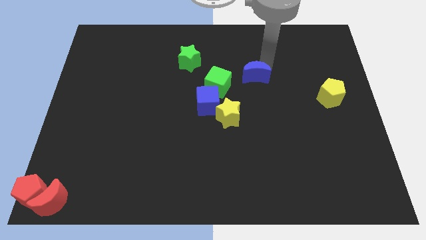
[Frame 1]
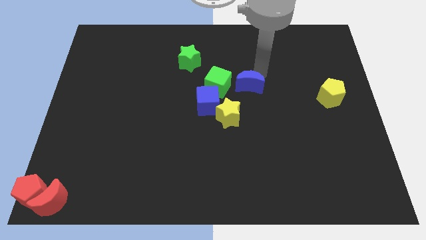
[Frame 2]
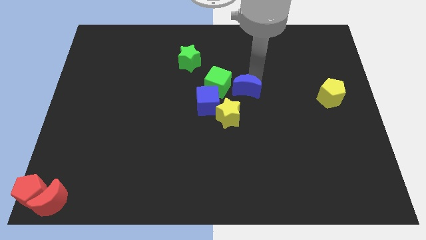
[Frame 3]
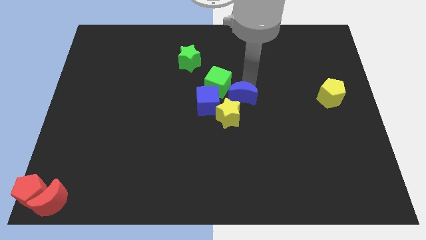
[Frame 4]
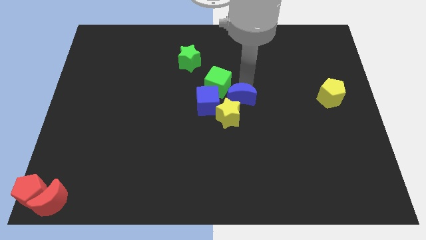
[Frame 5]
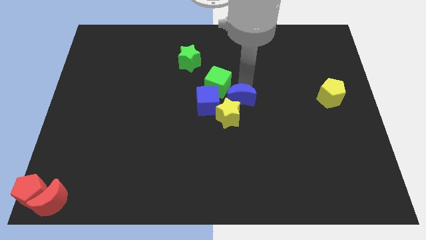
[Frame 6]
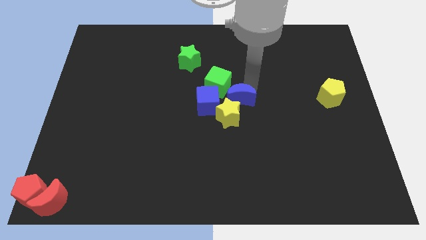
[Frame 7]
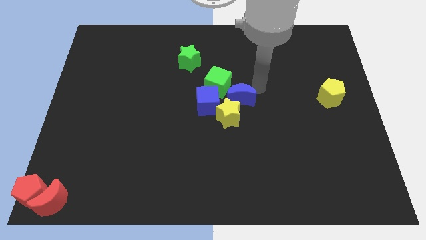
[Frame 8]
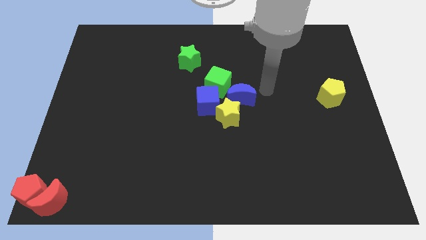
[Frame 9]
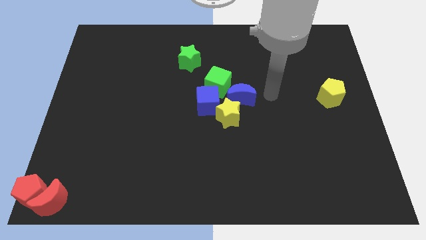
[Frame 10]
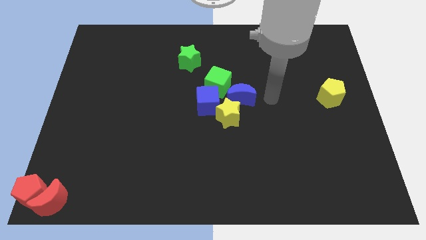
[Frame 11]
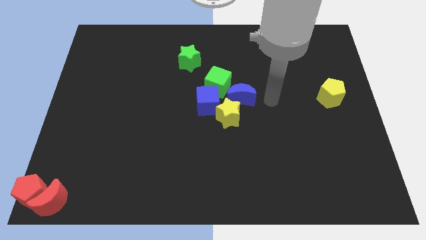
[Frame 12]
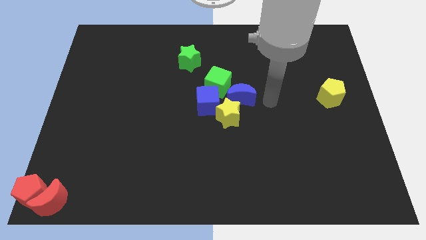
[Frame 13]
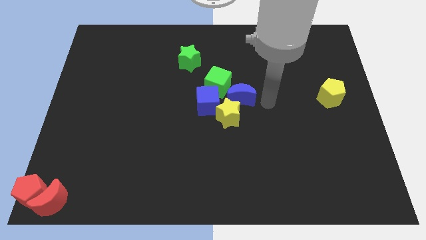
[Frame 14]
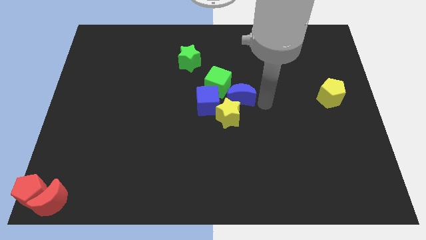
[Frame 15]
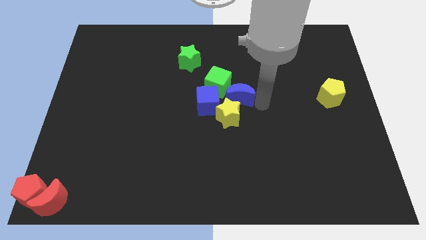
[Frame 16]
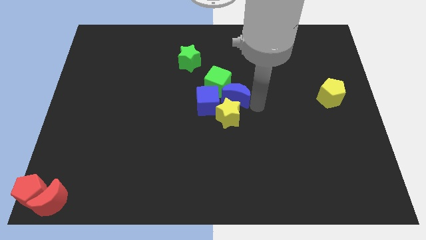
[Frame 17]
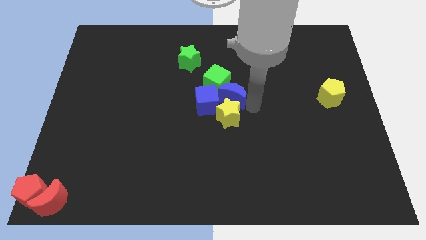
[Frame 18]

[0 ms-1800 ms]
push the blue crescent top of the yellow star

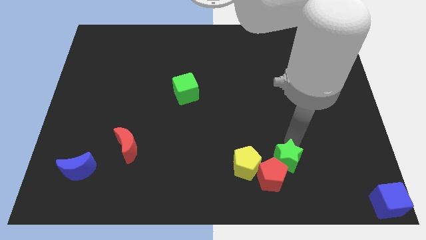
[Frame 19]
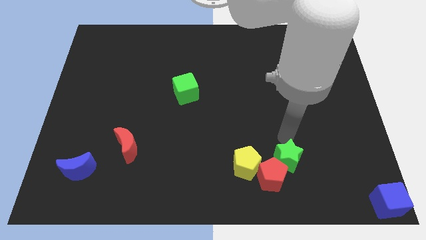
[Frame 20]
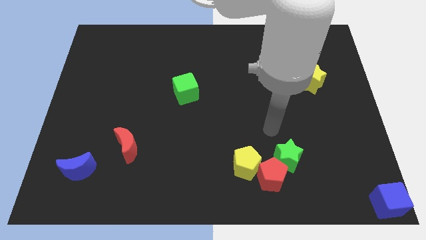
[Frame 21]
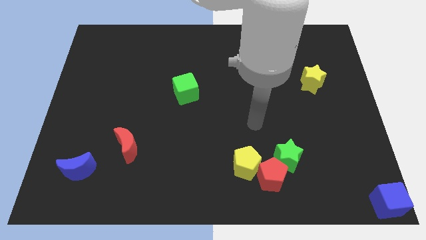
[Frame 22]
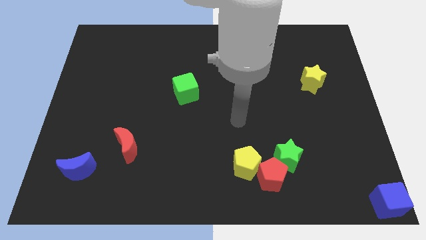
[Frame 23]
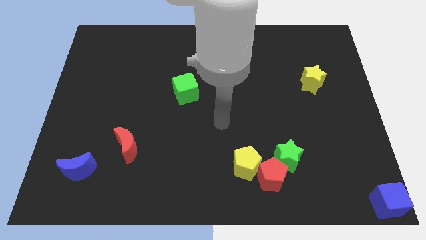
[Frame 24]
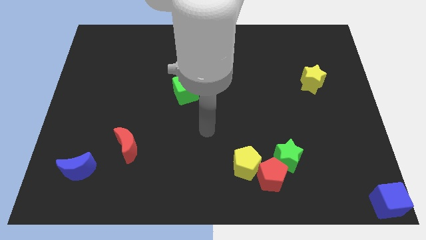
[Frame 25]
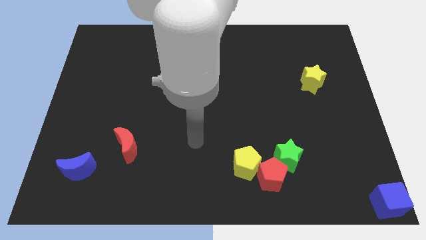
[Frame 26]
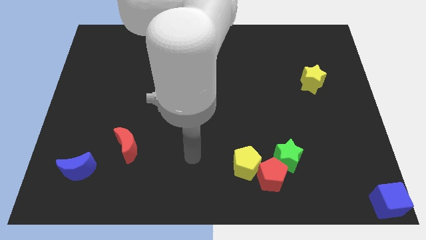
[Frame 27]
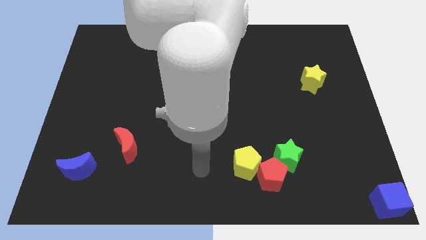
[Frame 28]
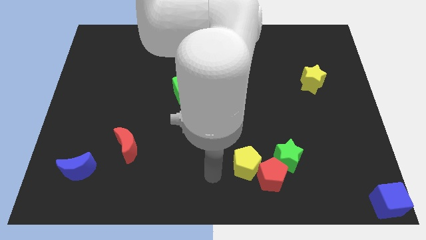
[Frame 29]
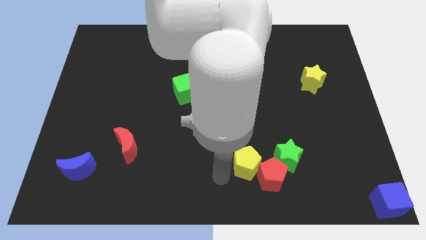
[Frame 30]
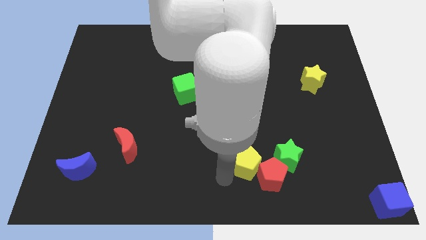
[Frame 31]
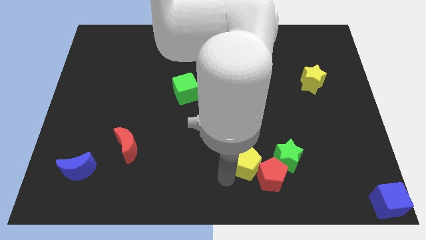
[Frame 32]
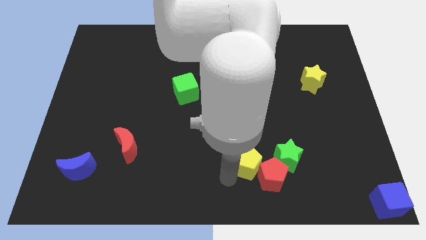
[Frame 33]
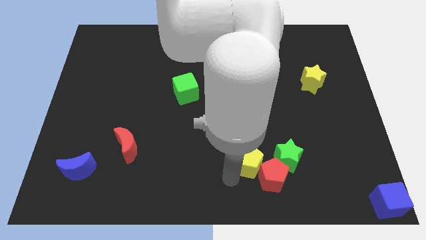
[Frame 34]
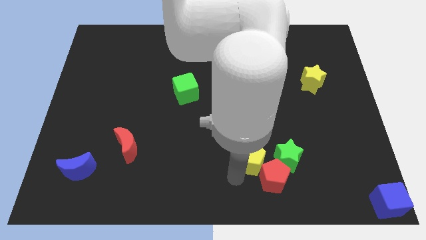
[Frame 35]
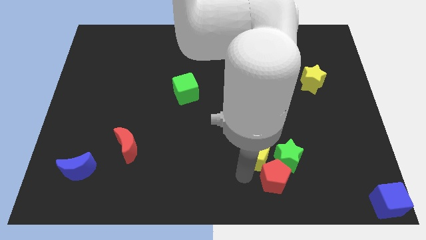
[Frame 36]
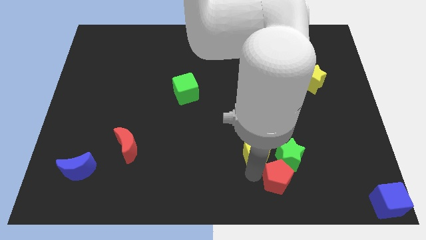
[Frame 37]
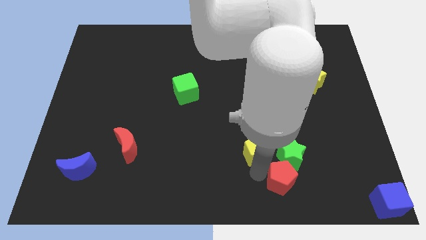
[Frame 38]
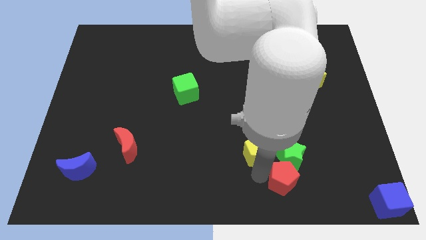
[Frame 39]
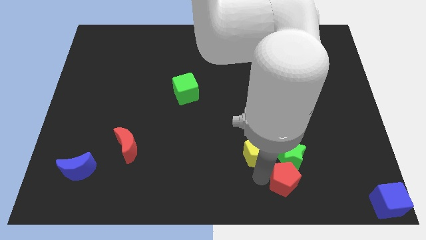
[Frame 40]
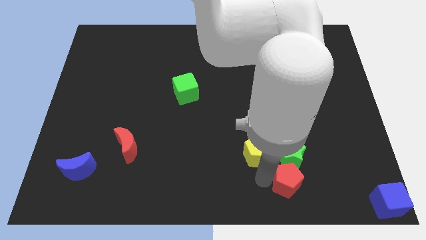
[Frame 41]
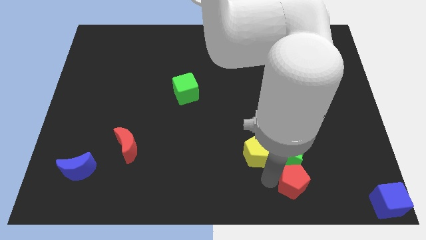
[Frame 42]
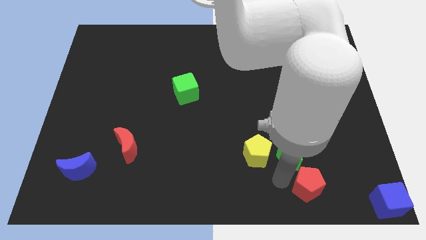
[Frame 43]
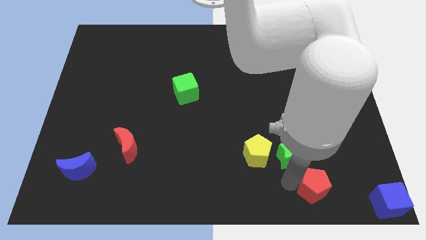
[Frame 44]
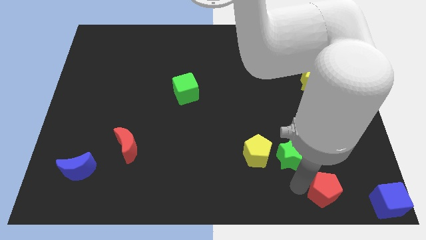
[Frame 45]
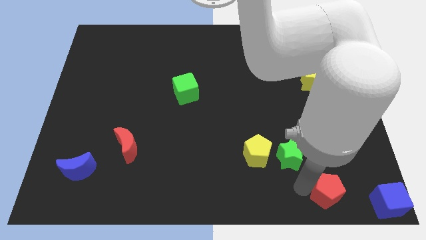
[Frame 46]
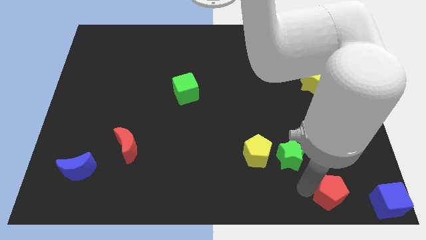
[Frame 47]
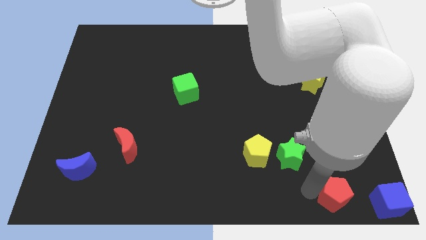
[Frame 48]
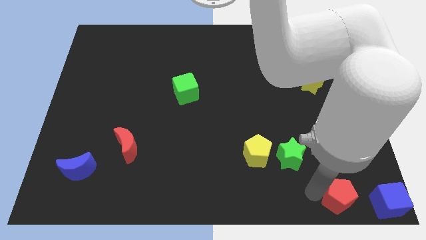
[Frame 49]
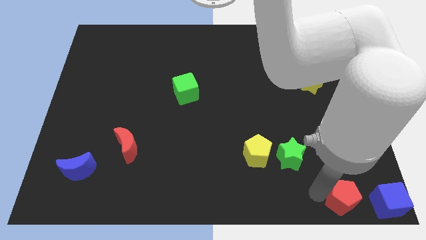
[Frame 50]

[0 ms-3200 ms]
move the red pentagon to the bottom right of the green star

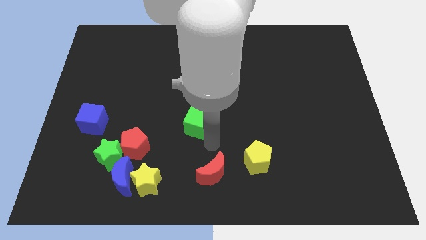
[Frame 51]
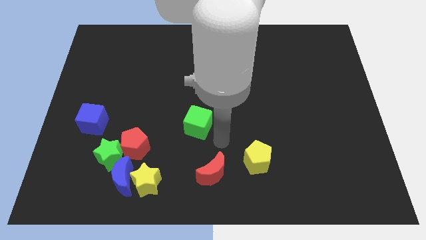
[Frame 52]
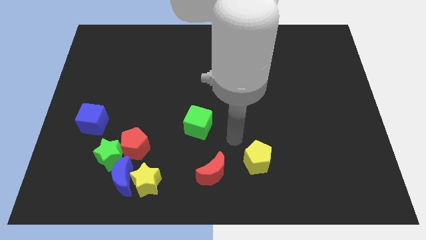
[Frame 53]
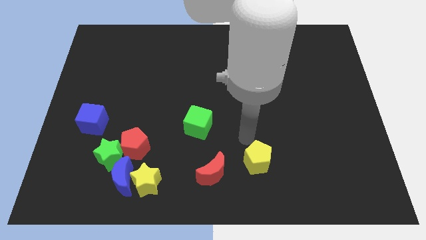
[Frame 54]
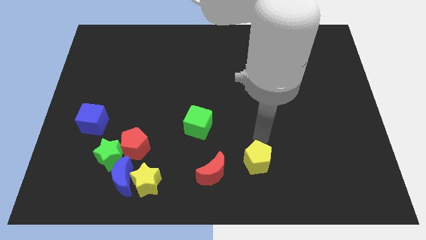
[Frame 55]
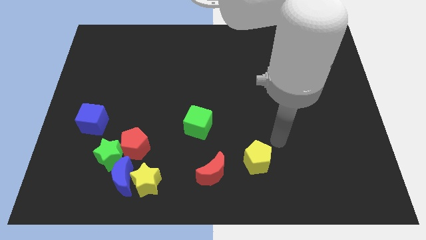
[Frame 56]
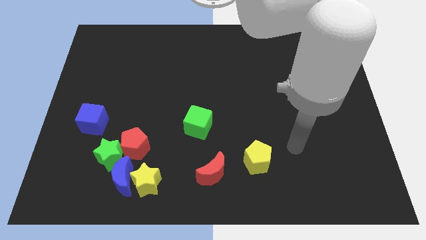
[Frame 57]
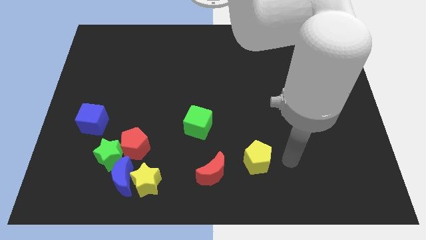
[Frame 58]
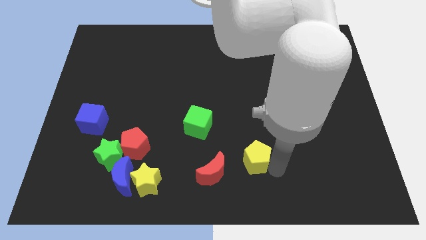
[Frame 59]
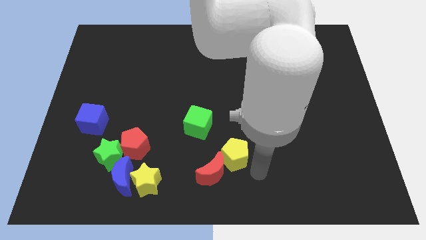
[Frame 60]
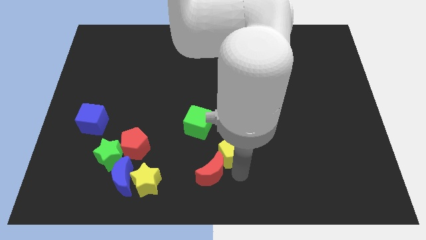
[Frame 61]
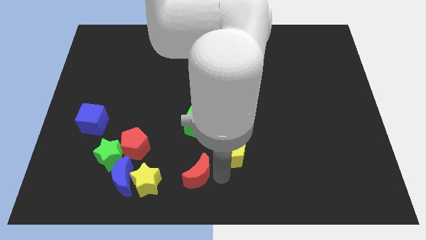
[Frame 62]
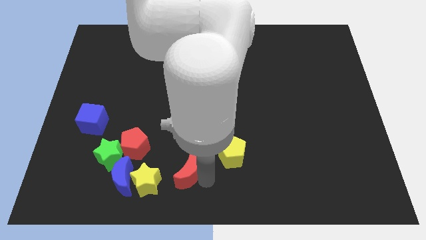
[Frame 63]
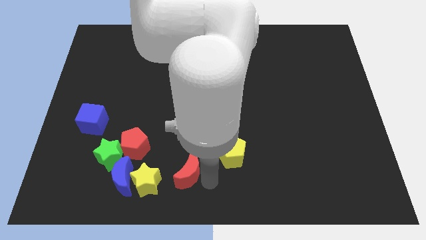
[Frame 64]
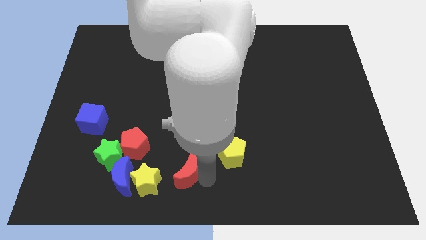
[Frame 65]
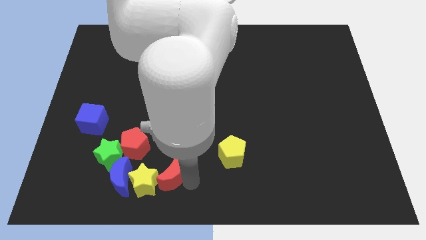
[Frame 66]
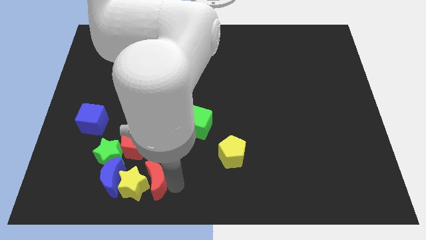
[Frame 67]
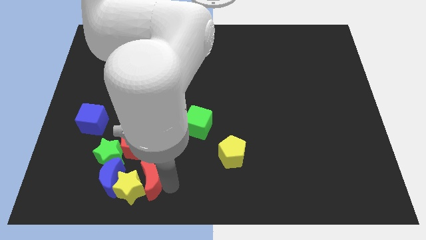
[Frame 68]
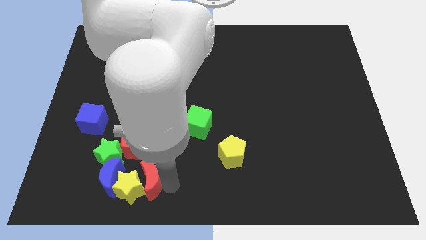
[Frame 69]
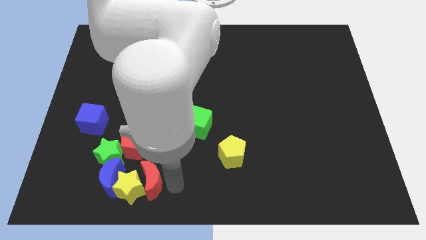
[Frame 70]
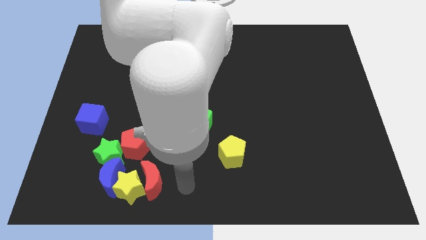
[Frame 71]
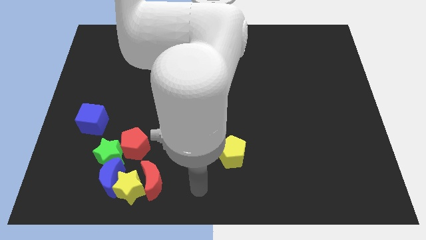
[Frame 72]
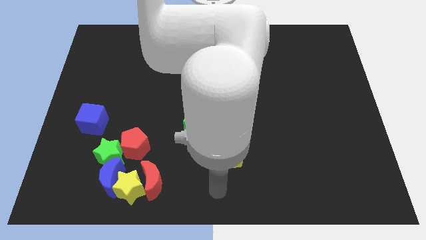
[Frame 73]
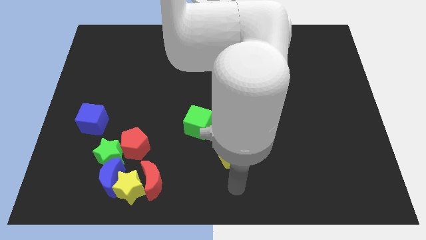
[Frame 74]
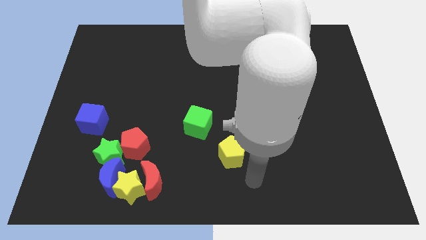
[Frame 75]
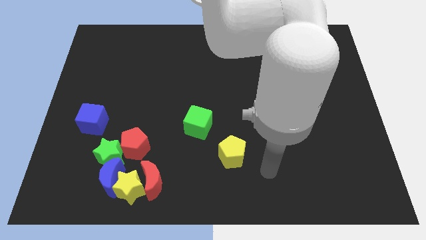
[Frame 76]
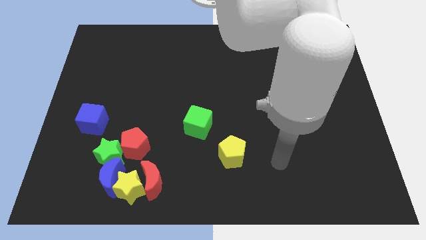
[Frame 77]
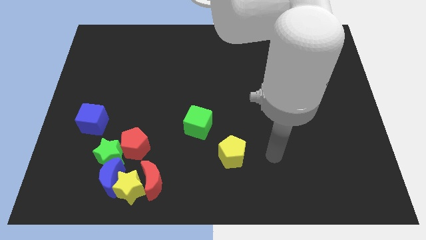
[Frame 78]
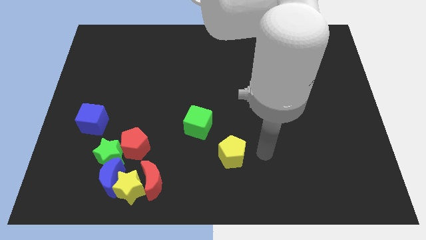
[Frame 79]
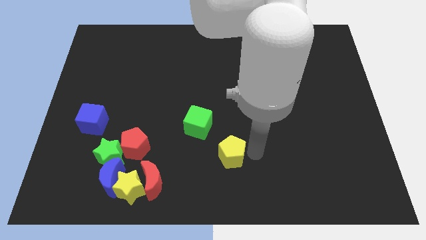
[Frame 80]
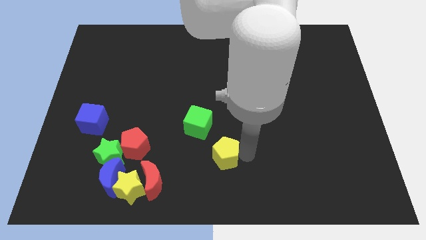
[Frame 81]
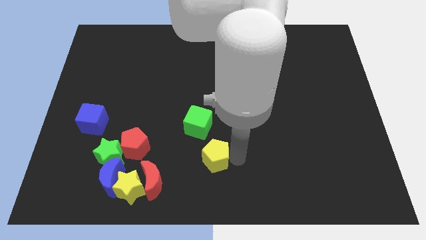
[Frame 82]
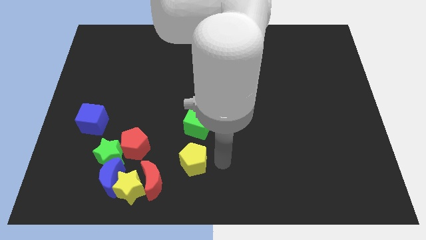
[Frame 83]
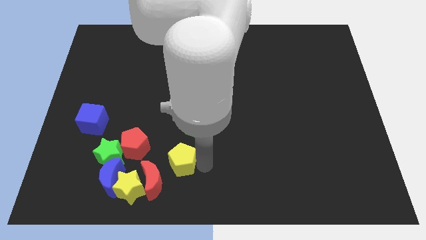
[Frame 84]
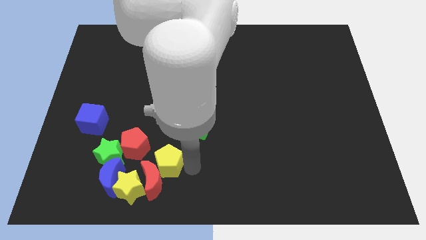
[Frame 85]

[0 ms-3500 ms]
push the yellow blocks and red moon towards the blue moon

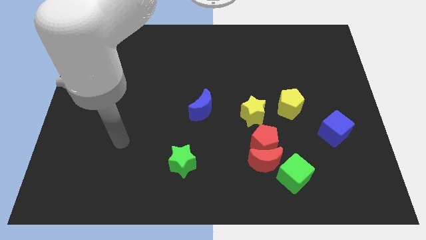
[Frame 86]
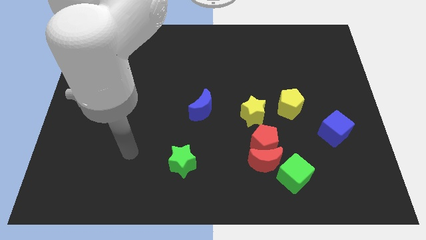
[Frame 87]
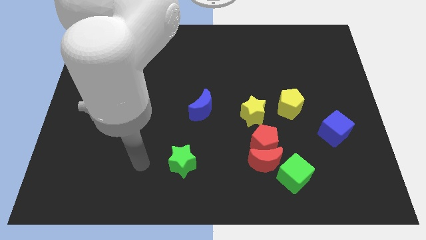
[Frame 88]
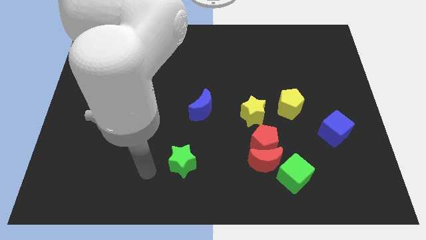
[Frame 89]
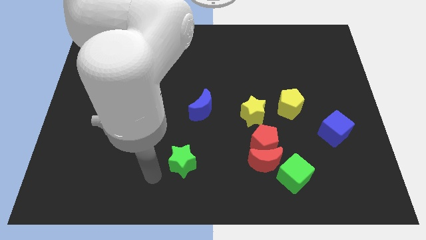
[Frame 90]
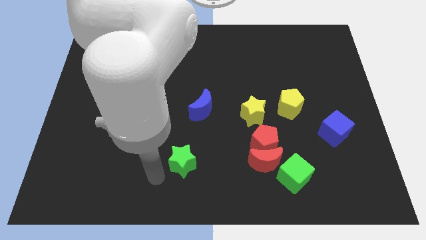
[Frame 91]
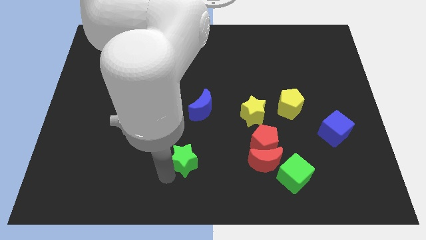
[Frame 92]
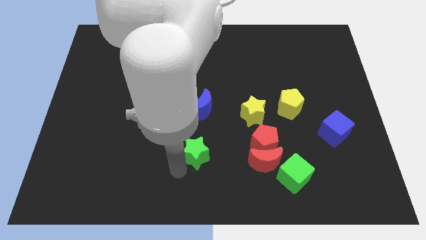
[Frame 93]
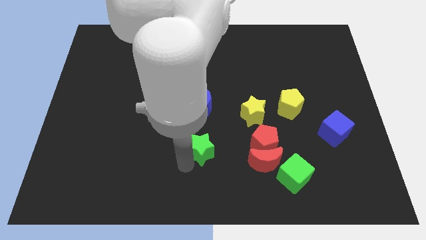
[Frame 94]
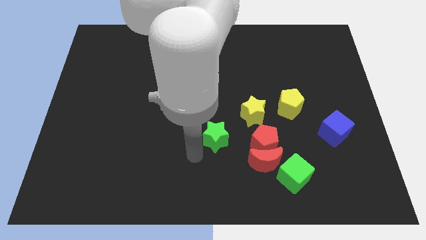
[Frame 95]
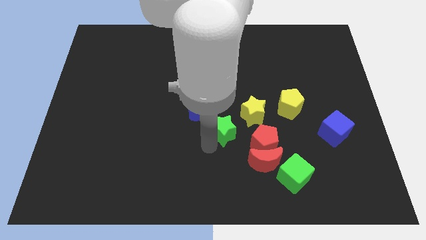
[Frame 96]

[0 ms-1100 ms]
move green star towards yellow star
